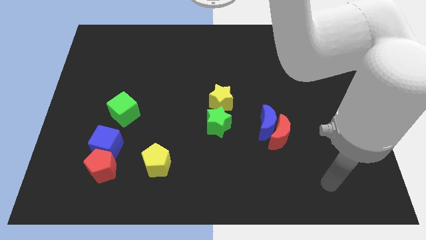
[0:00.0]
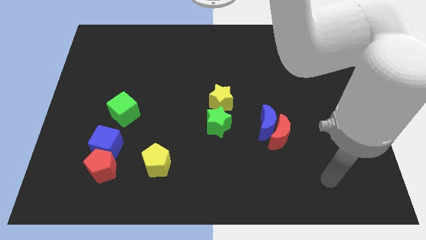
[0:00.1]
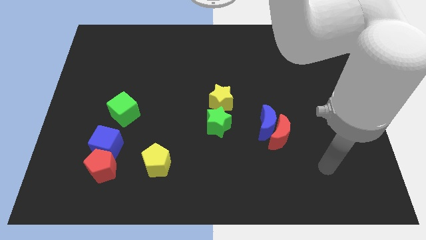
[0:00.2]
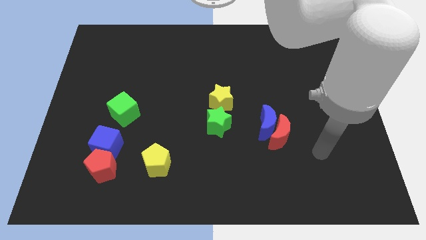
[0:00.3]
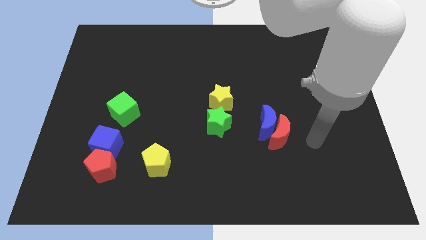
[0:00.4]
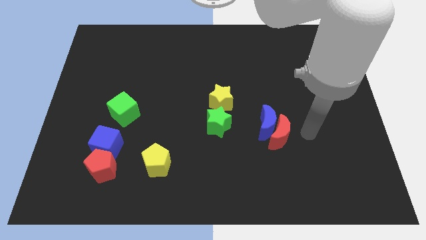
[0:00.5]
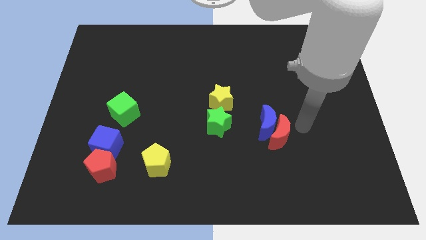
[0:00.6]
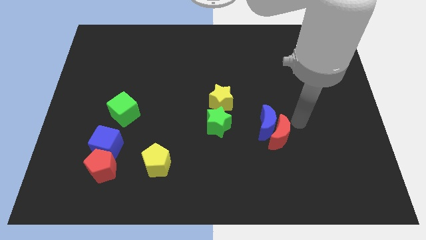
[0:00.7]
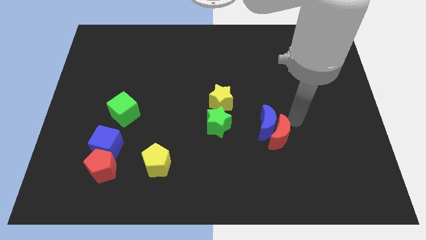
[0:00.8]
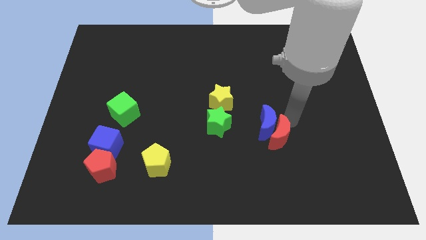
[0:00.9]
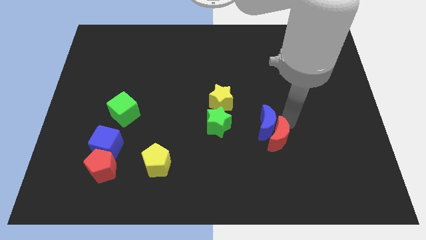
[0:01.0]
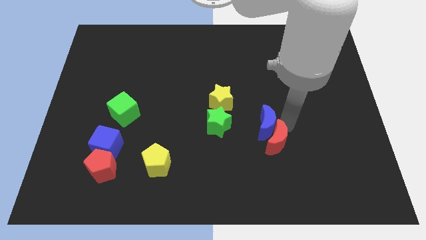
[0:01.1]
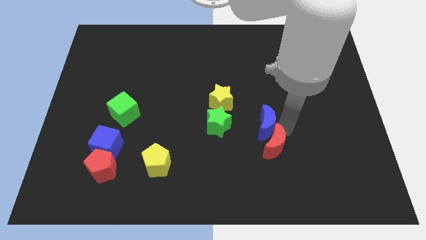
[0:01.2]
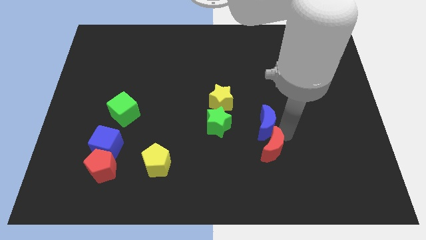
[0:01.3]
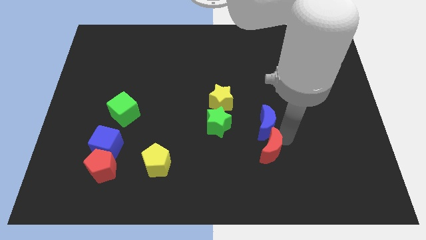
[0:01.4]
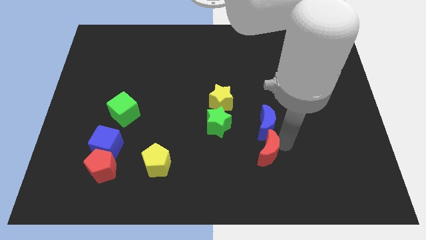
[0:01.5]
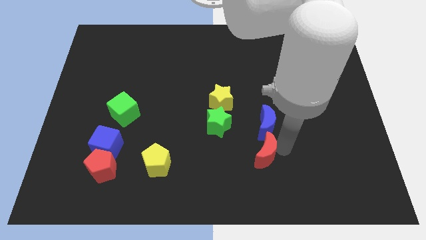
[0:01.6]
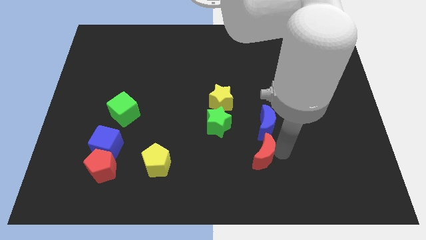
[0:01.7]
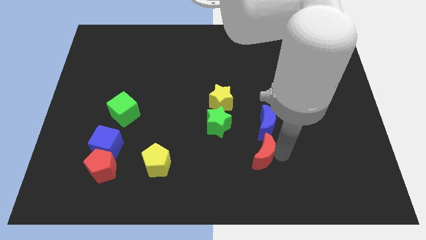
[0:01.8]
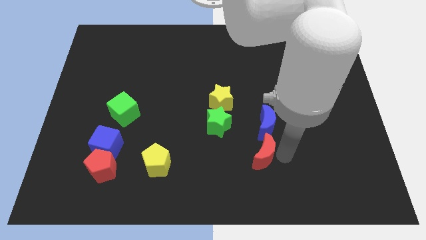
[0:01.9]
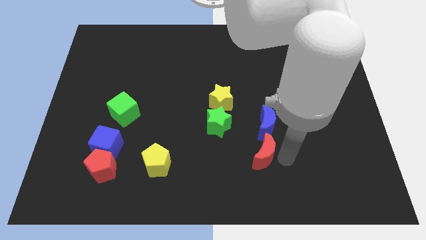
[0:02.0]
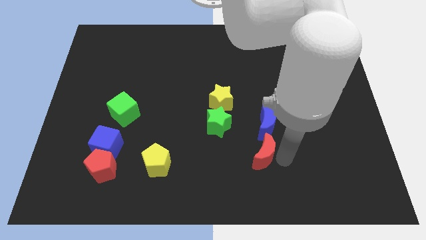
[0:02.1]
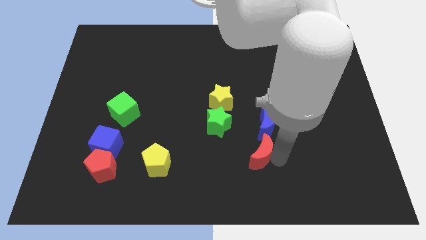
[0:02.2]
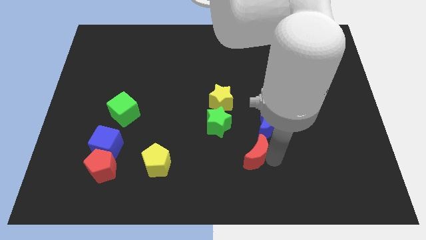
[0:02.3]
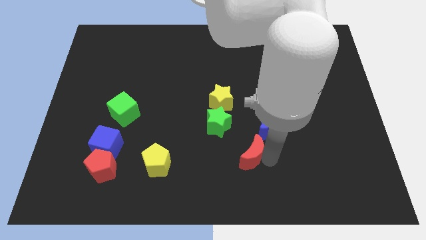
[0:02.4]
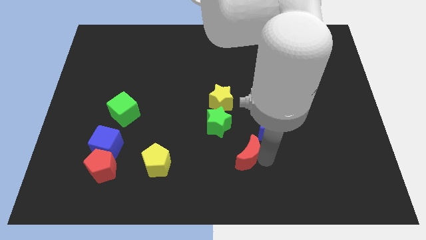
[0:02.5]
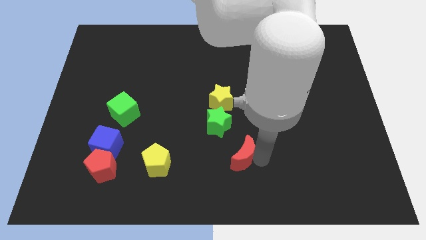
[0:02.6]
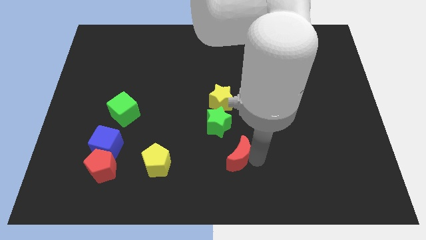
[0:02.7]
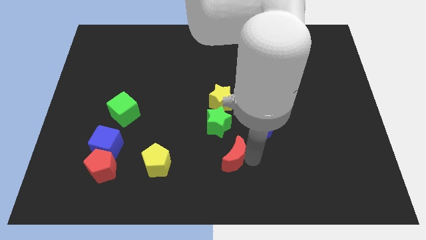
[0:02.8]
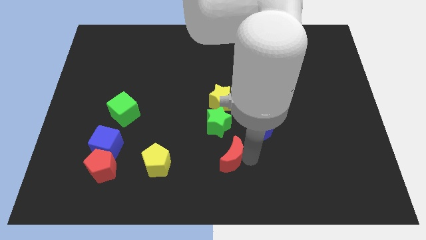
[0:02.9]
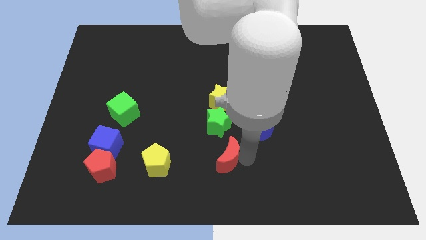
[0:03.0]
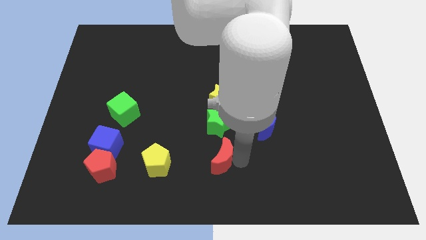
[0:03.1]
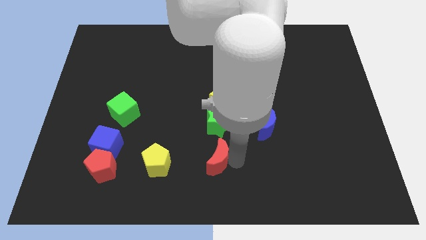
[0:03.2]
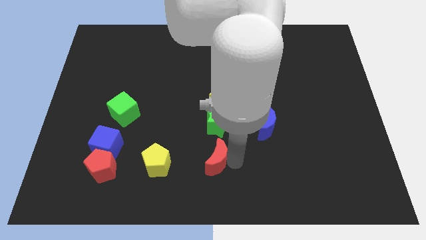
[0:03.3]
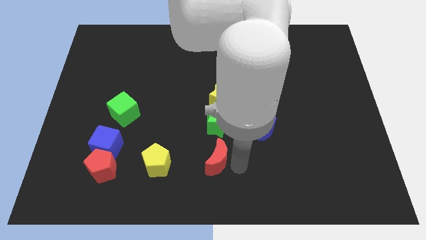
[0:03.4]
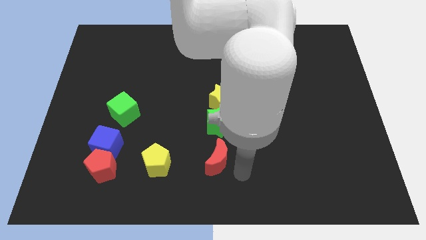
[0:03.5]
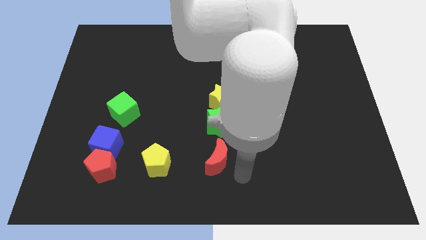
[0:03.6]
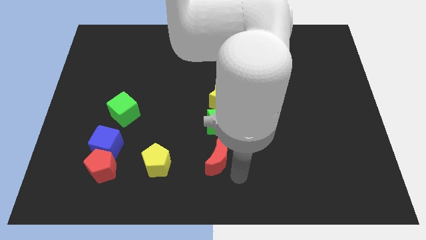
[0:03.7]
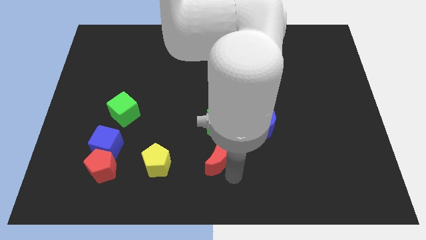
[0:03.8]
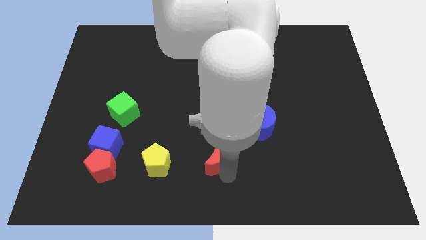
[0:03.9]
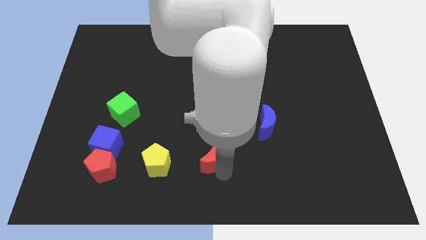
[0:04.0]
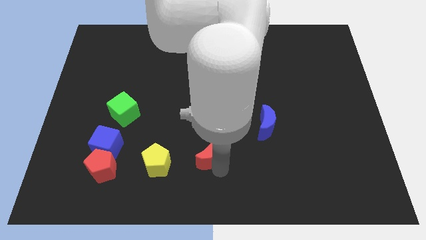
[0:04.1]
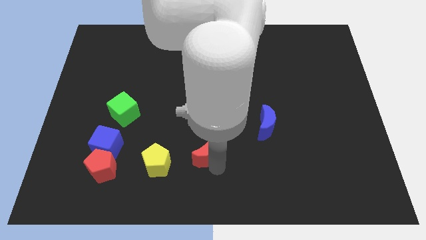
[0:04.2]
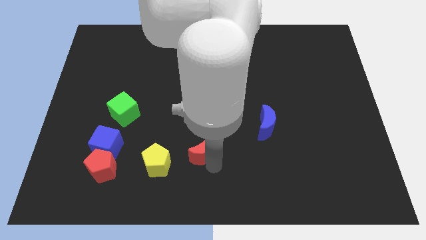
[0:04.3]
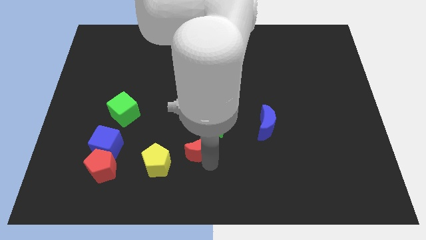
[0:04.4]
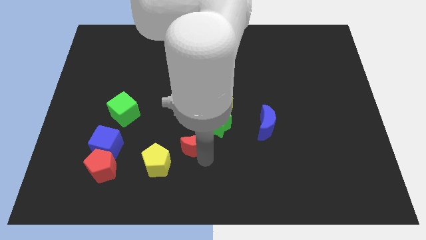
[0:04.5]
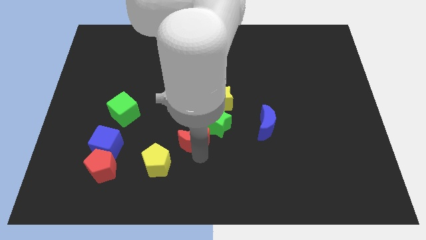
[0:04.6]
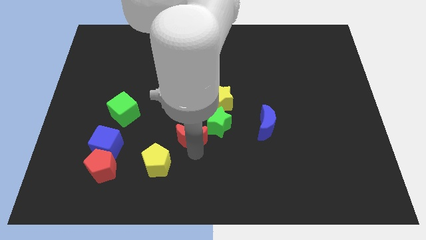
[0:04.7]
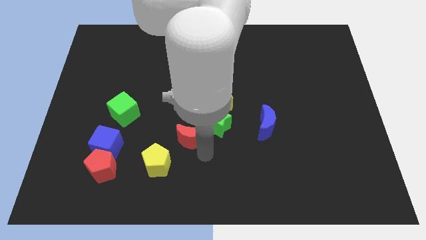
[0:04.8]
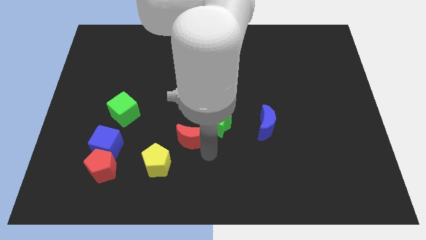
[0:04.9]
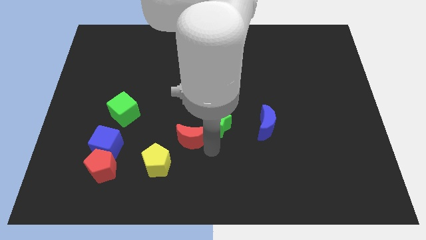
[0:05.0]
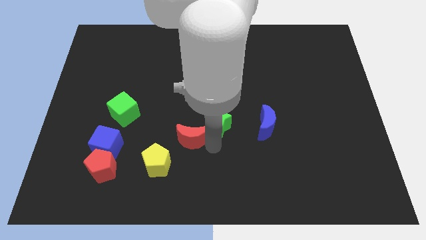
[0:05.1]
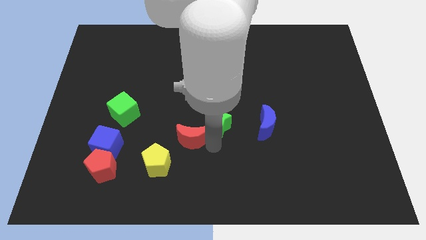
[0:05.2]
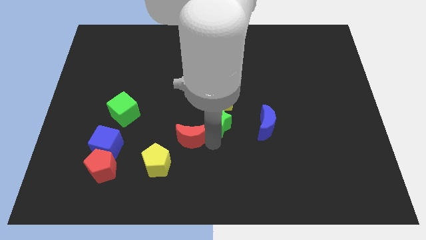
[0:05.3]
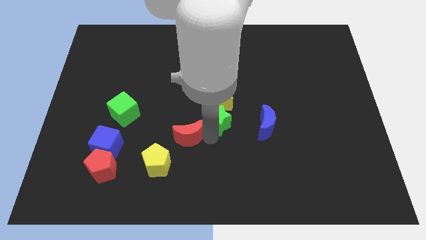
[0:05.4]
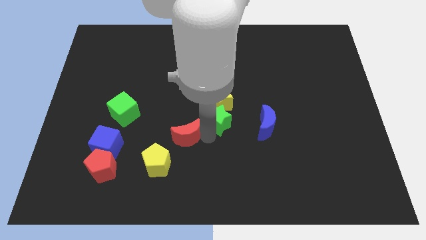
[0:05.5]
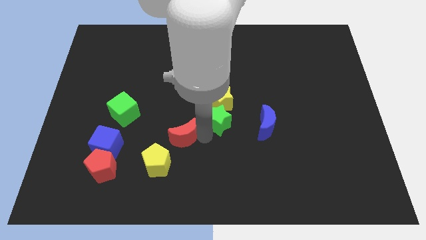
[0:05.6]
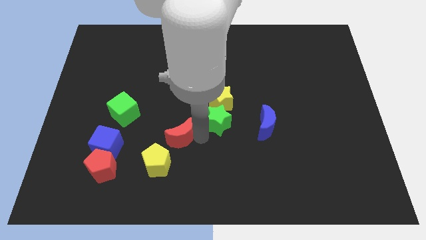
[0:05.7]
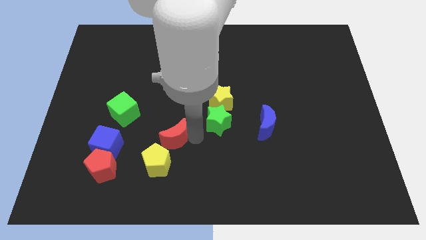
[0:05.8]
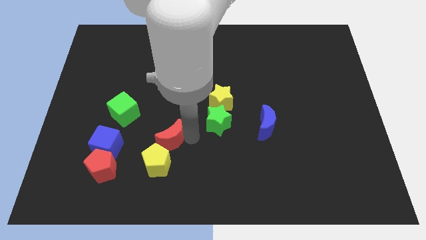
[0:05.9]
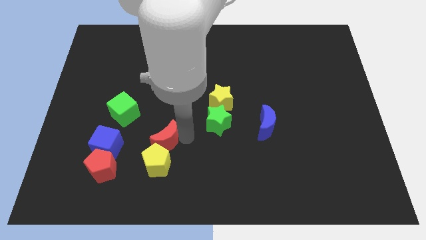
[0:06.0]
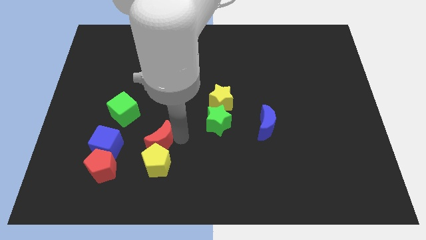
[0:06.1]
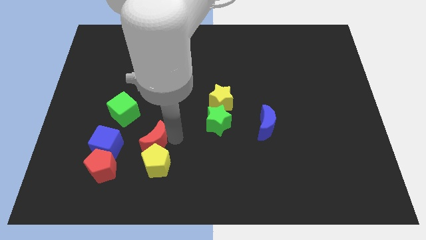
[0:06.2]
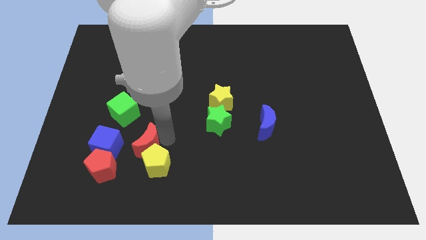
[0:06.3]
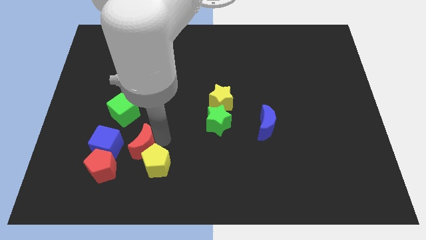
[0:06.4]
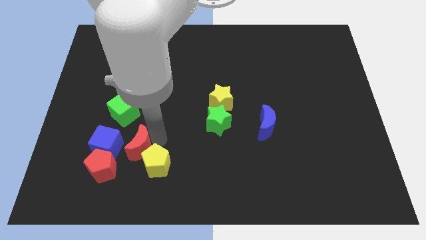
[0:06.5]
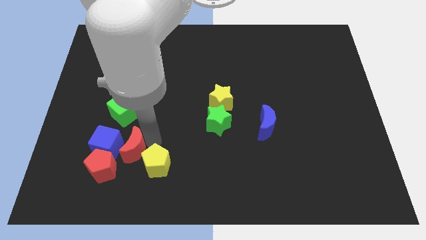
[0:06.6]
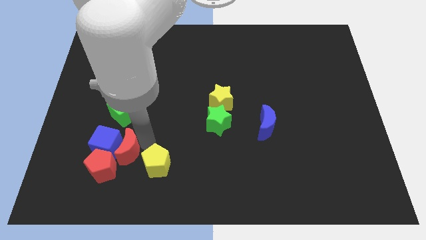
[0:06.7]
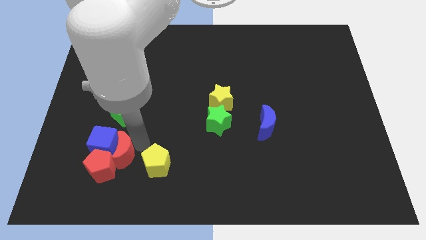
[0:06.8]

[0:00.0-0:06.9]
slide the red moon to the blue cube

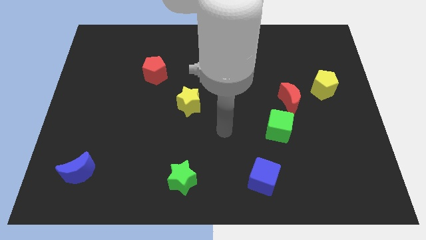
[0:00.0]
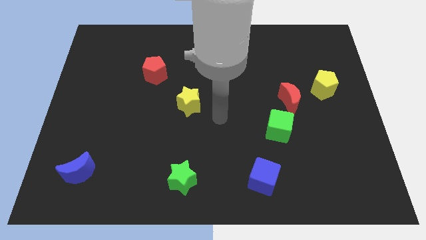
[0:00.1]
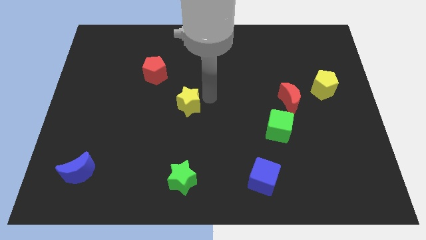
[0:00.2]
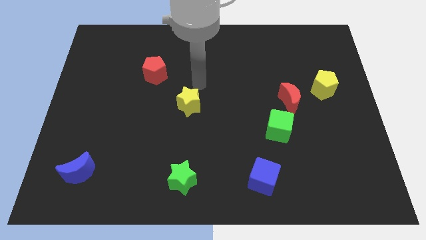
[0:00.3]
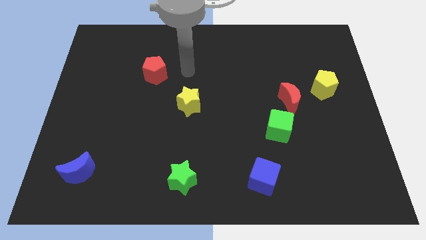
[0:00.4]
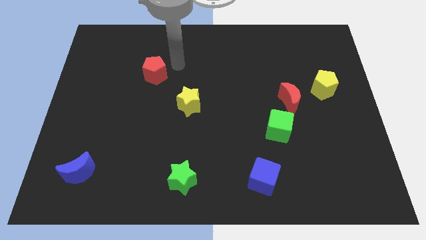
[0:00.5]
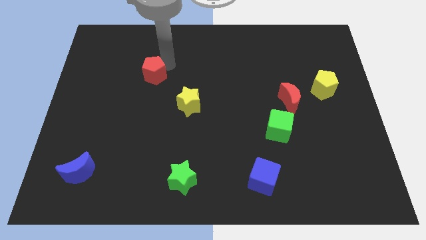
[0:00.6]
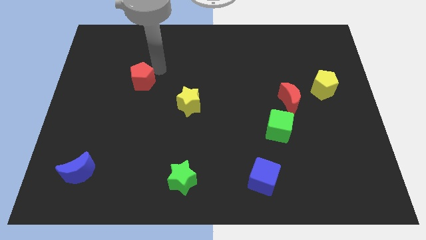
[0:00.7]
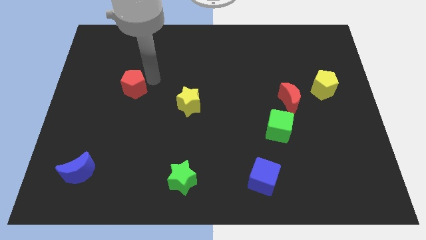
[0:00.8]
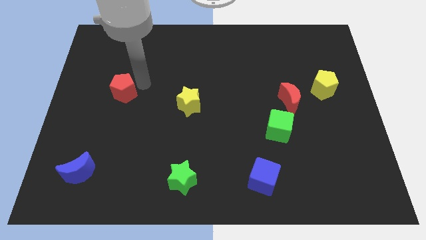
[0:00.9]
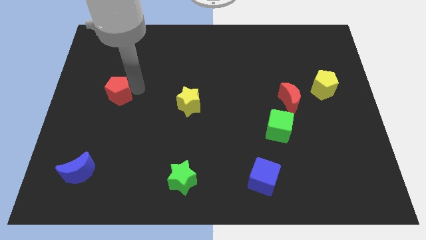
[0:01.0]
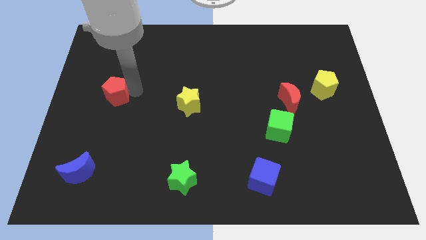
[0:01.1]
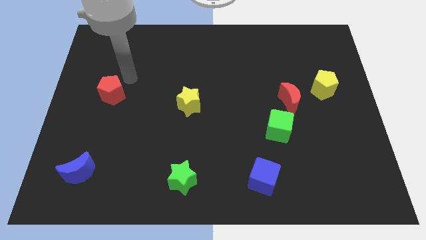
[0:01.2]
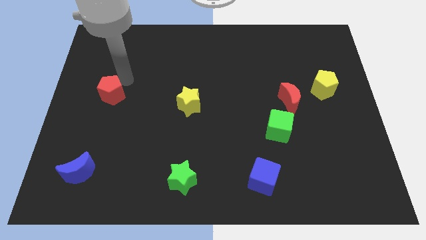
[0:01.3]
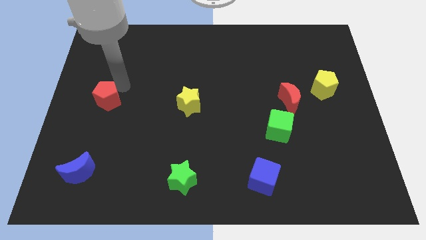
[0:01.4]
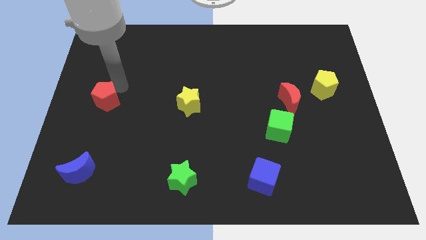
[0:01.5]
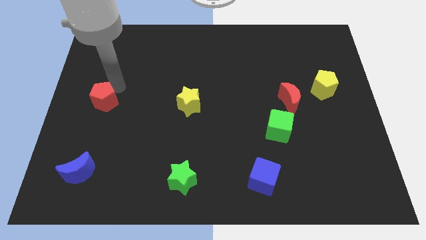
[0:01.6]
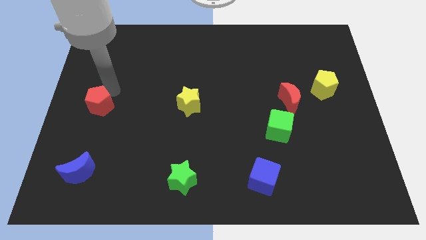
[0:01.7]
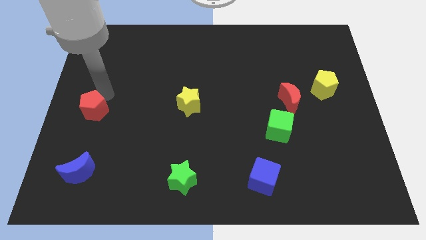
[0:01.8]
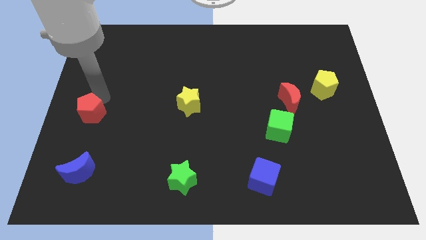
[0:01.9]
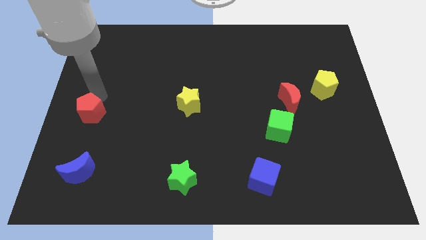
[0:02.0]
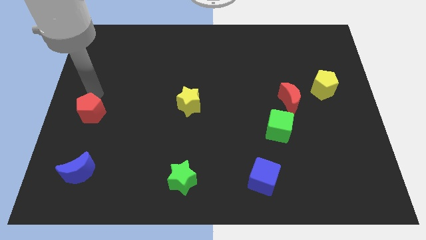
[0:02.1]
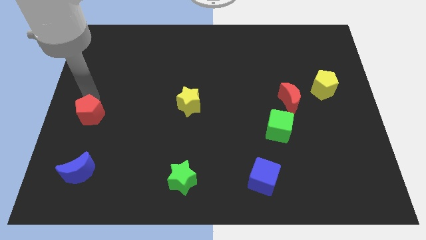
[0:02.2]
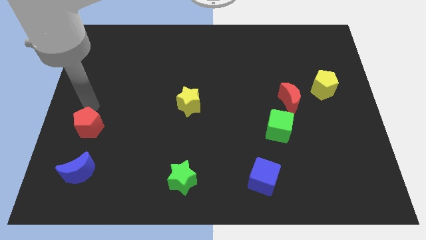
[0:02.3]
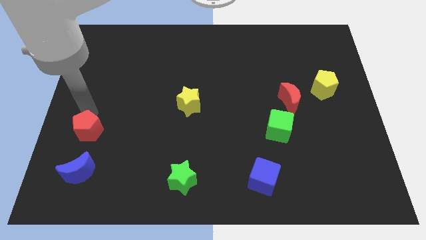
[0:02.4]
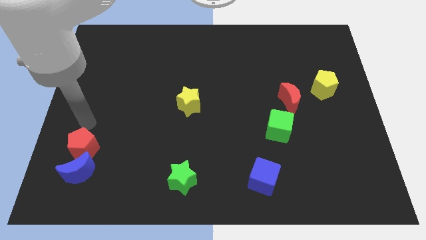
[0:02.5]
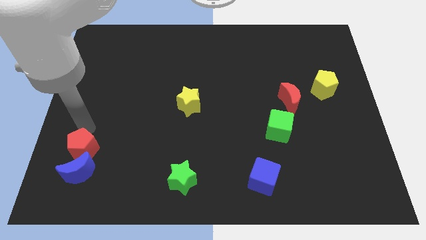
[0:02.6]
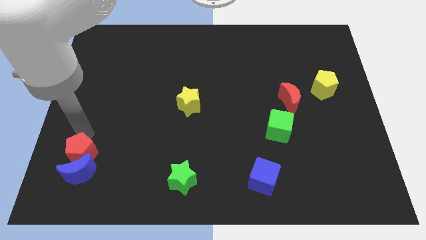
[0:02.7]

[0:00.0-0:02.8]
push the red pentagon towards the blue moon
